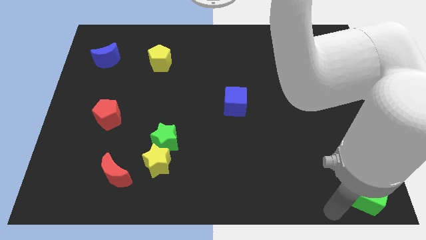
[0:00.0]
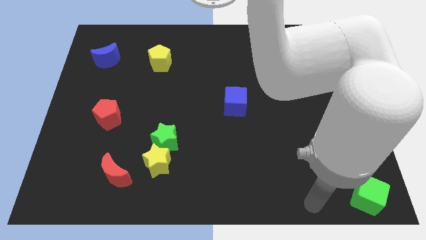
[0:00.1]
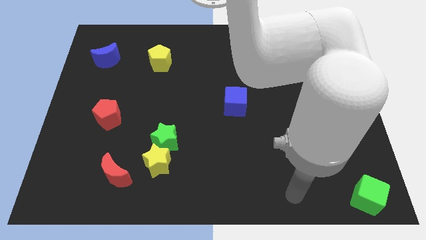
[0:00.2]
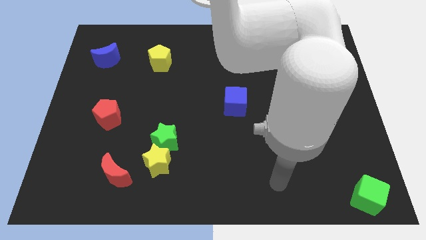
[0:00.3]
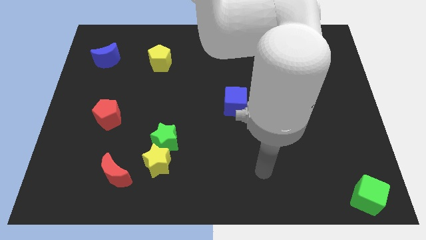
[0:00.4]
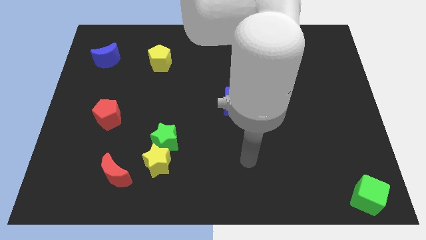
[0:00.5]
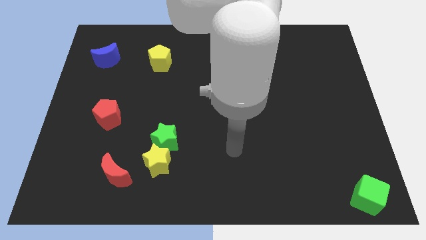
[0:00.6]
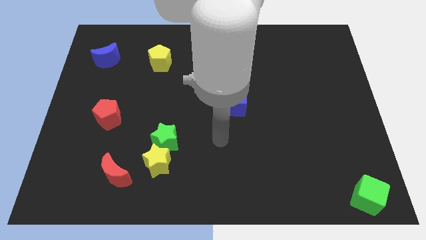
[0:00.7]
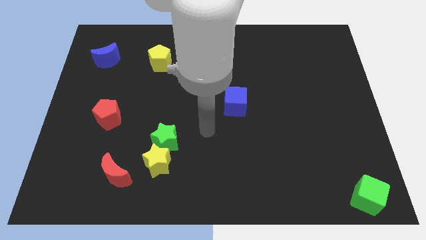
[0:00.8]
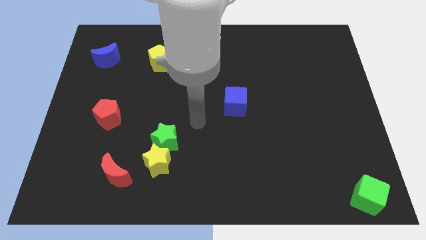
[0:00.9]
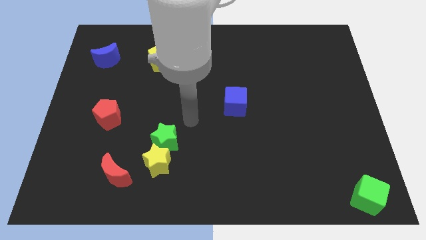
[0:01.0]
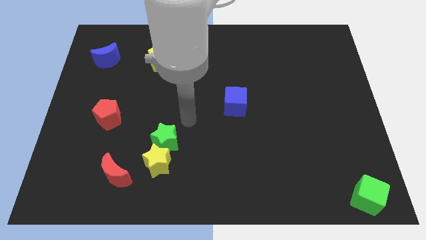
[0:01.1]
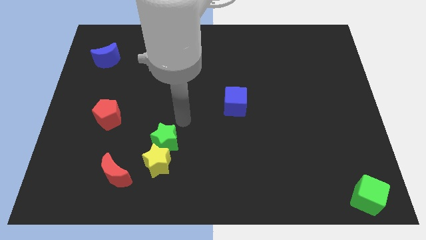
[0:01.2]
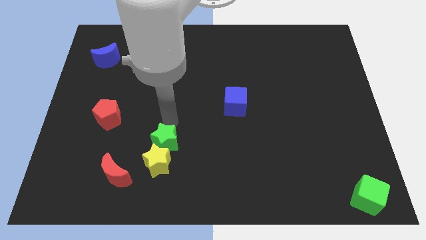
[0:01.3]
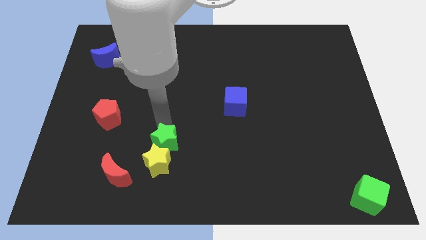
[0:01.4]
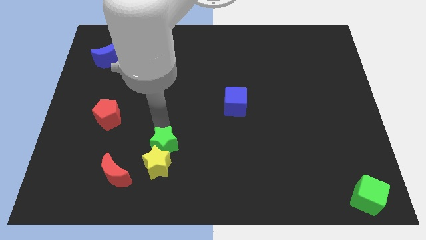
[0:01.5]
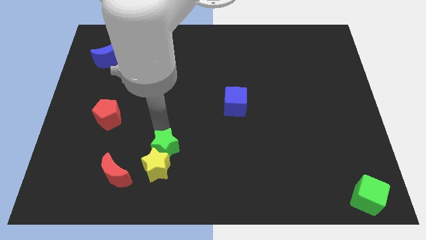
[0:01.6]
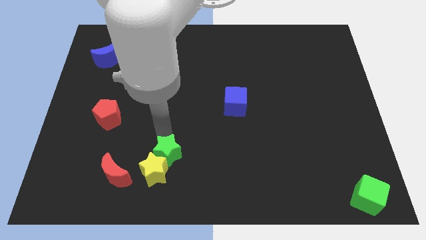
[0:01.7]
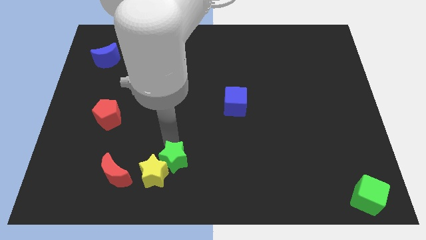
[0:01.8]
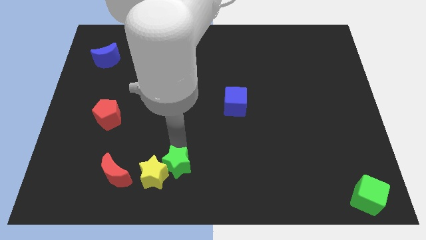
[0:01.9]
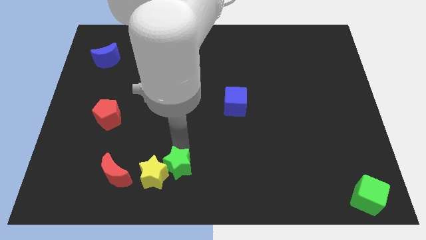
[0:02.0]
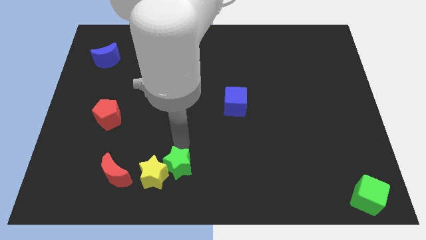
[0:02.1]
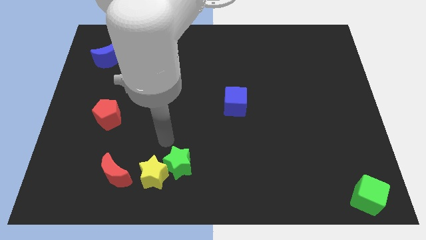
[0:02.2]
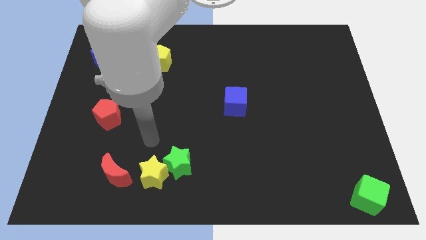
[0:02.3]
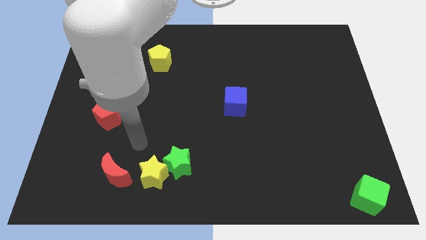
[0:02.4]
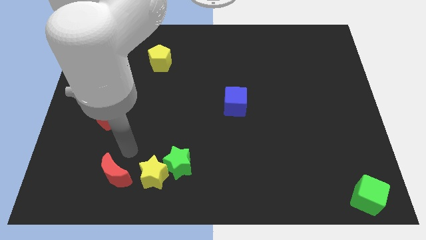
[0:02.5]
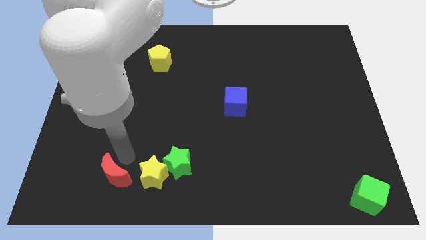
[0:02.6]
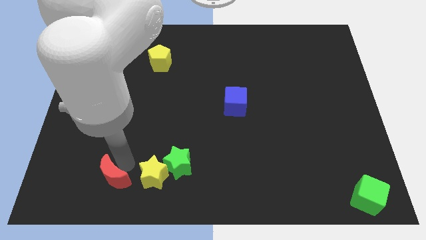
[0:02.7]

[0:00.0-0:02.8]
push the green star to the bottom of the board

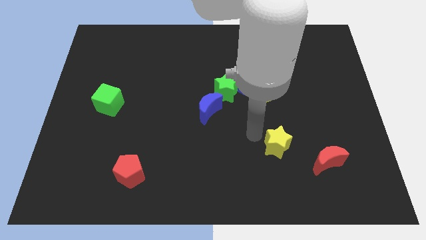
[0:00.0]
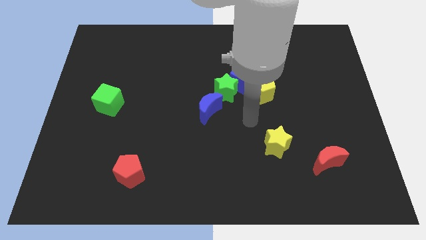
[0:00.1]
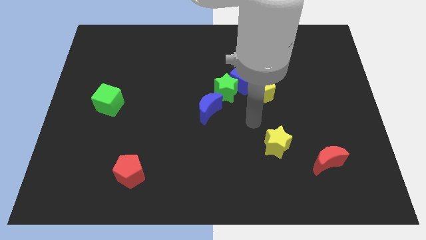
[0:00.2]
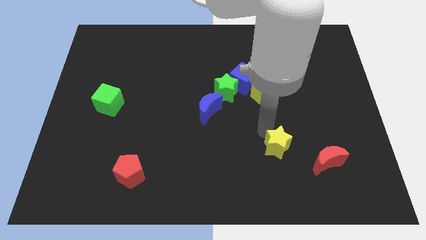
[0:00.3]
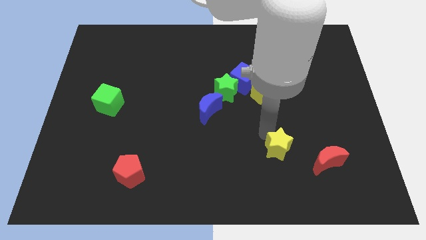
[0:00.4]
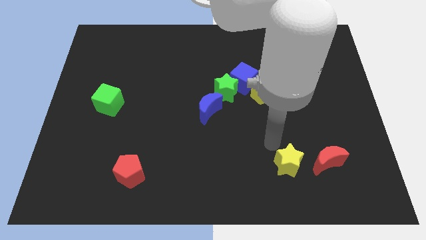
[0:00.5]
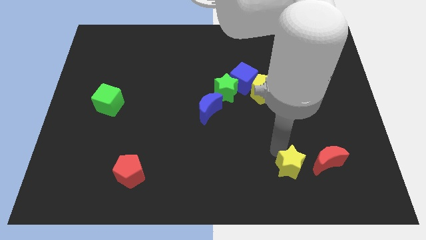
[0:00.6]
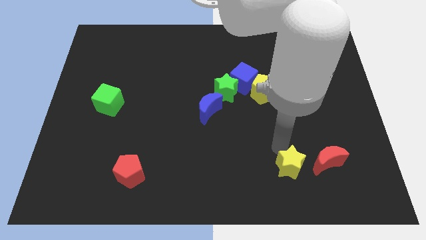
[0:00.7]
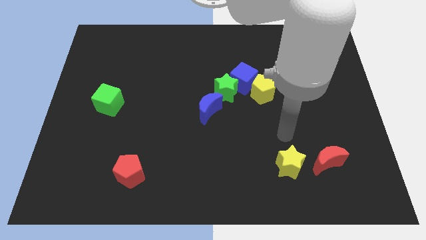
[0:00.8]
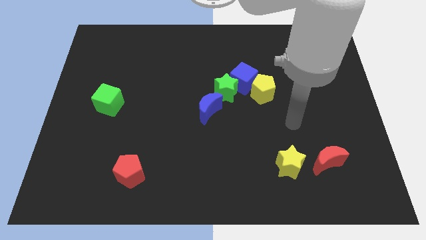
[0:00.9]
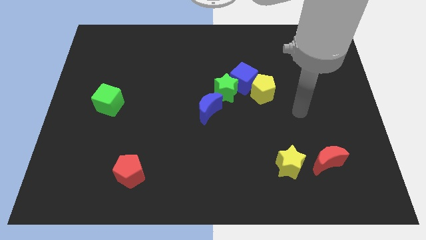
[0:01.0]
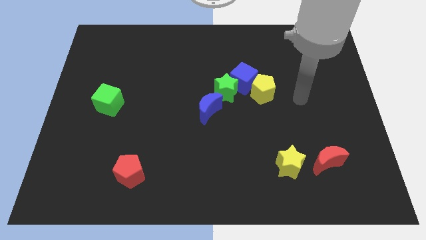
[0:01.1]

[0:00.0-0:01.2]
move the yellow star to the bottomleft side of the red moon

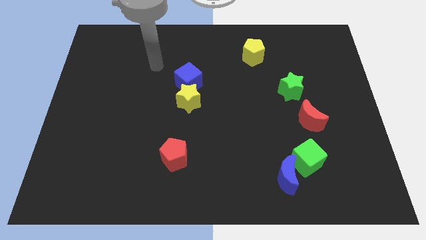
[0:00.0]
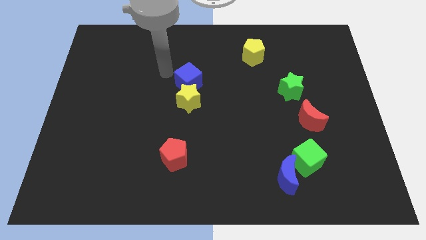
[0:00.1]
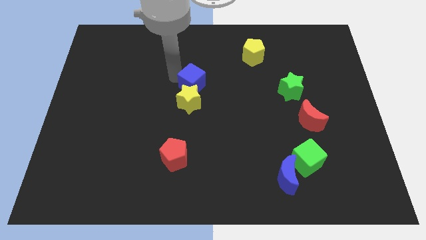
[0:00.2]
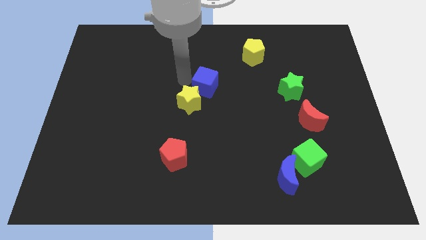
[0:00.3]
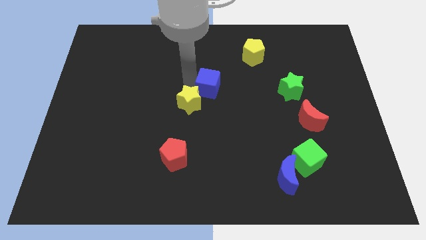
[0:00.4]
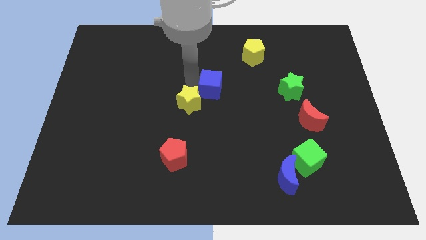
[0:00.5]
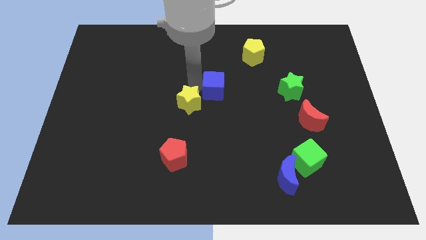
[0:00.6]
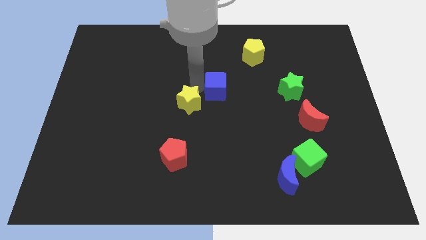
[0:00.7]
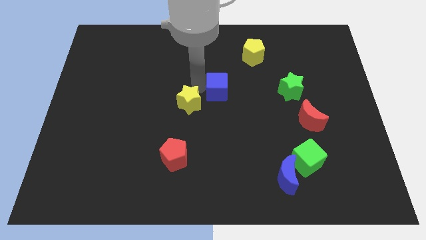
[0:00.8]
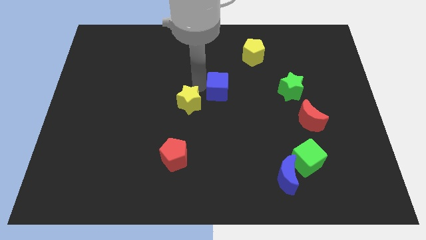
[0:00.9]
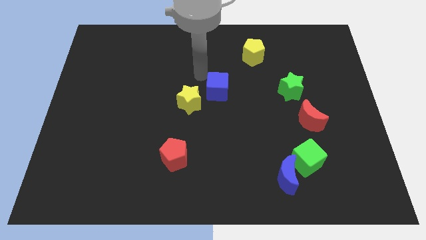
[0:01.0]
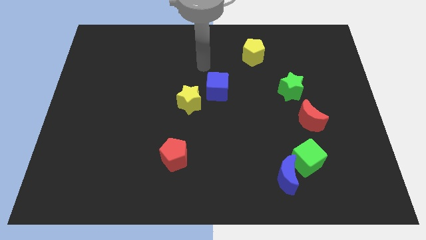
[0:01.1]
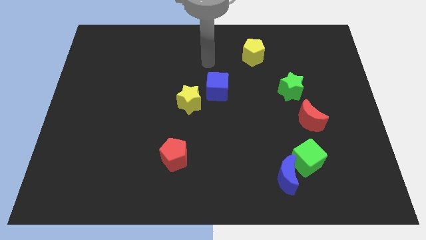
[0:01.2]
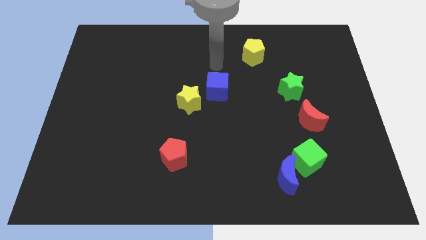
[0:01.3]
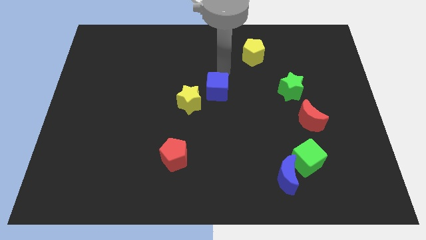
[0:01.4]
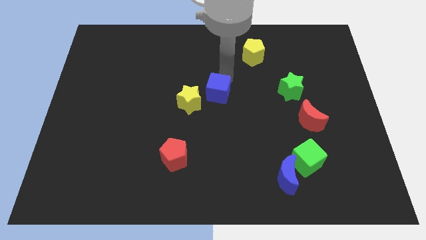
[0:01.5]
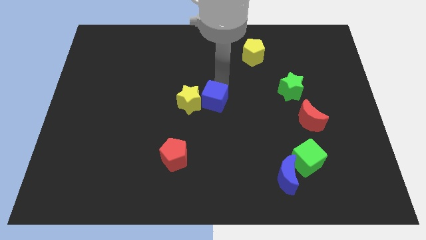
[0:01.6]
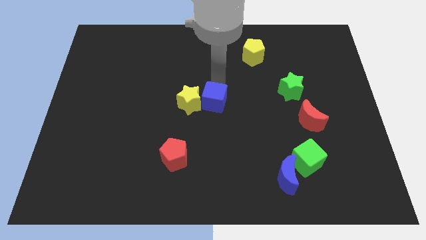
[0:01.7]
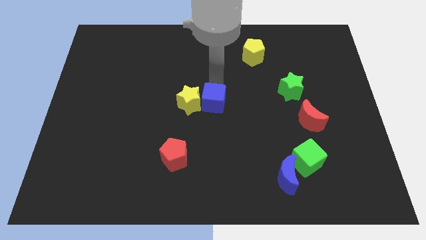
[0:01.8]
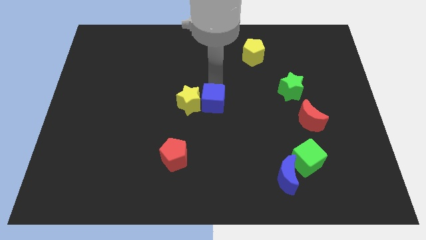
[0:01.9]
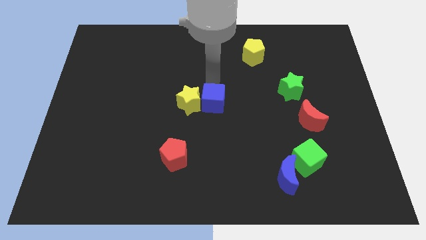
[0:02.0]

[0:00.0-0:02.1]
place the blue cube on the right side of the yellow star

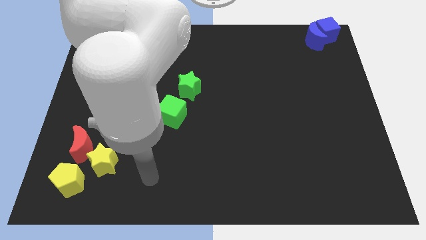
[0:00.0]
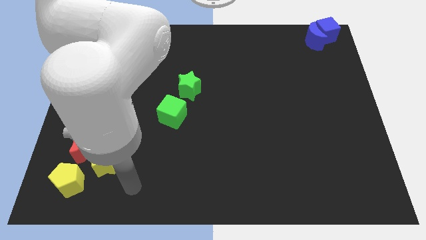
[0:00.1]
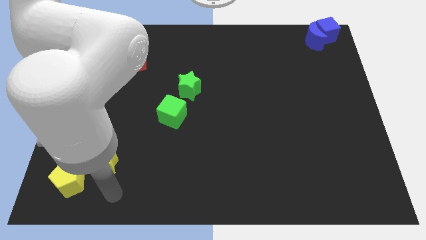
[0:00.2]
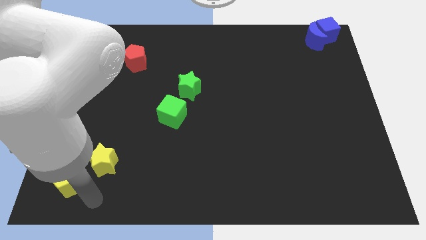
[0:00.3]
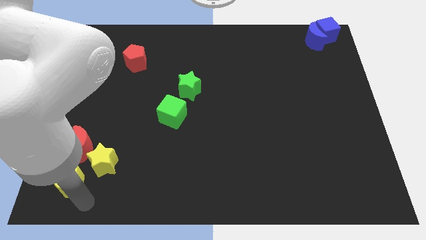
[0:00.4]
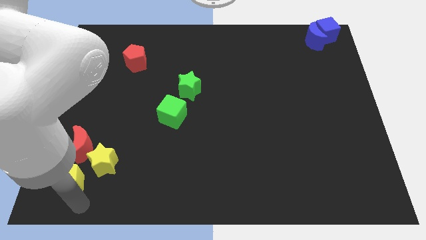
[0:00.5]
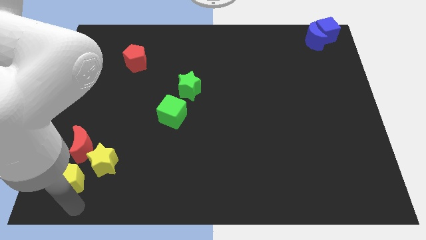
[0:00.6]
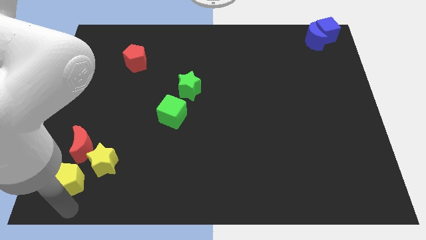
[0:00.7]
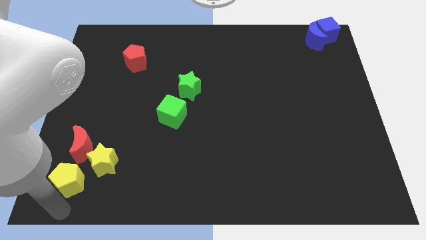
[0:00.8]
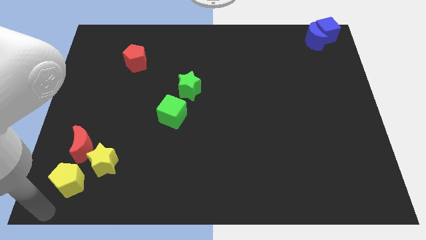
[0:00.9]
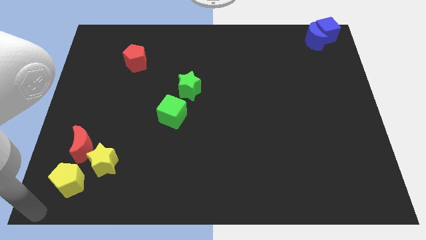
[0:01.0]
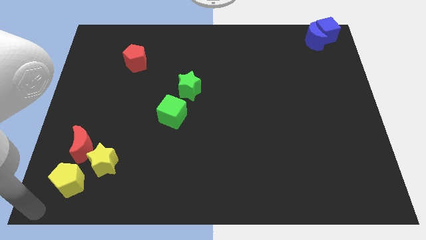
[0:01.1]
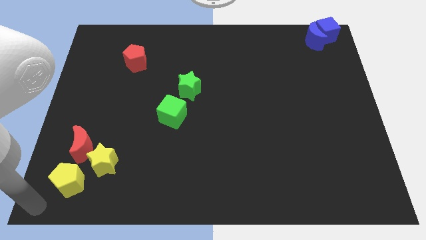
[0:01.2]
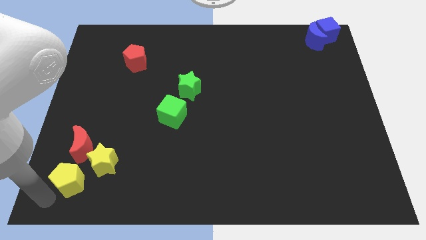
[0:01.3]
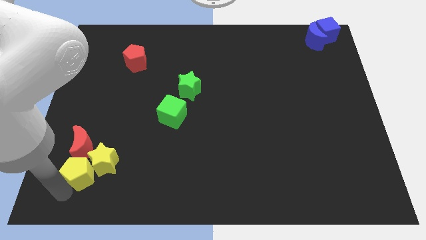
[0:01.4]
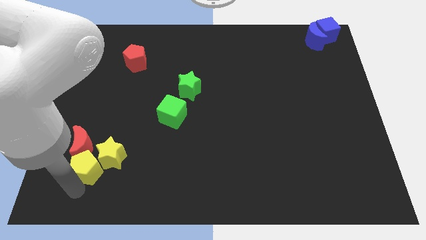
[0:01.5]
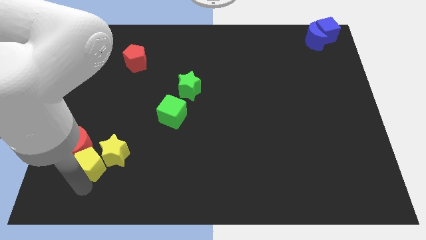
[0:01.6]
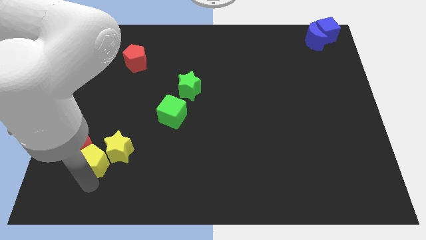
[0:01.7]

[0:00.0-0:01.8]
slide the yellow pentagon at the bottom left side of the yellow star

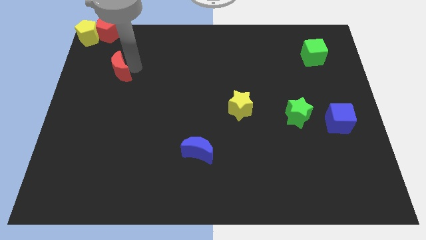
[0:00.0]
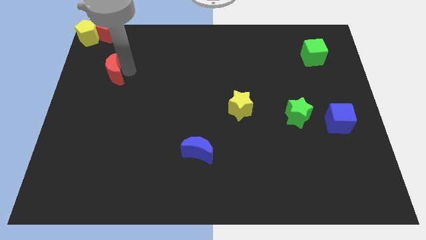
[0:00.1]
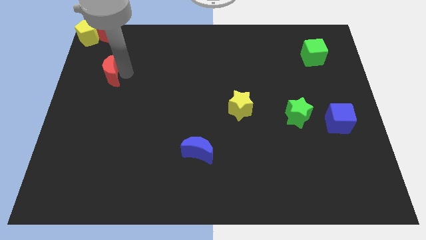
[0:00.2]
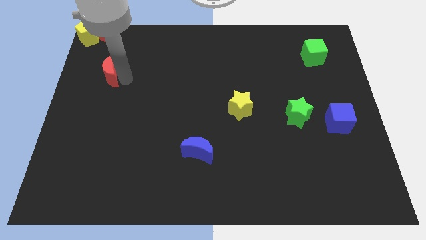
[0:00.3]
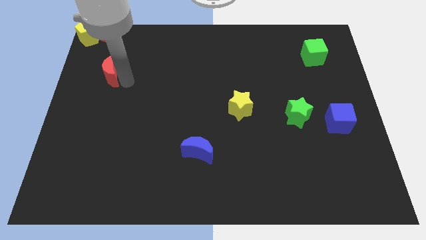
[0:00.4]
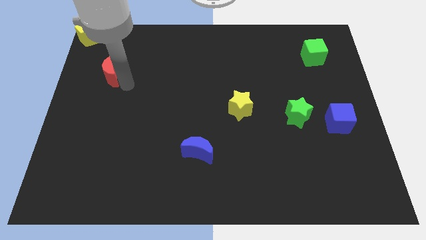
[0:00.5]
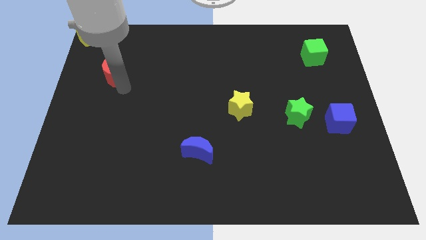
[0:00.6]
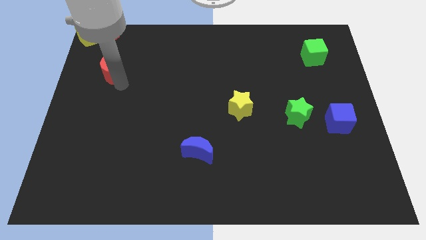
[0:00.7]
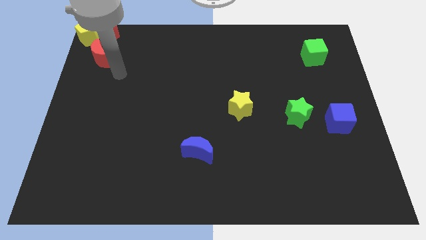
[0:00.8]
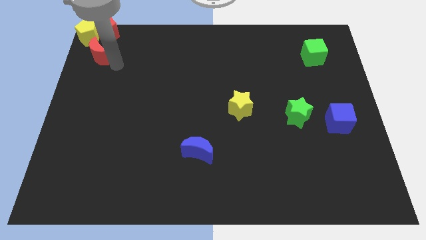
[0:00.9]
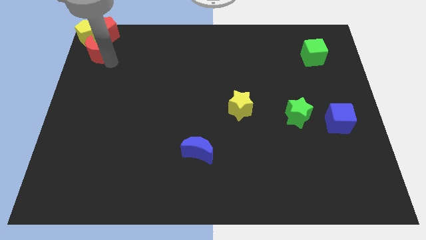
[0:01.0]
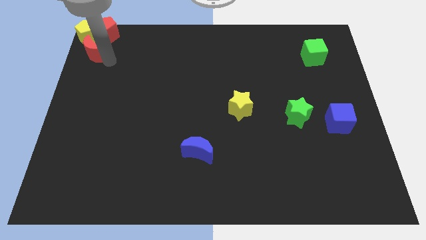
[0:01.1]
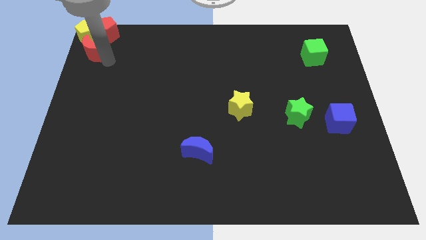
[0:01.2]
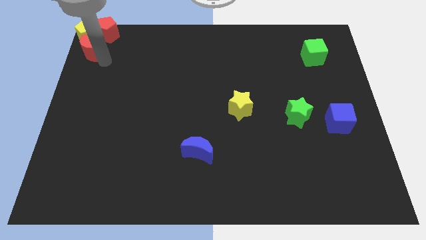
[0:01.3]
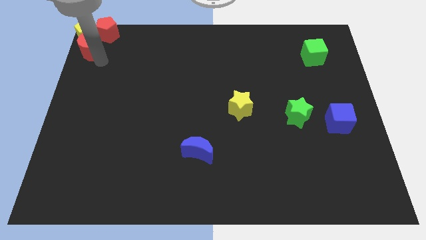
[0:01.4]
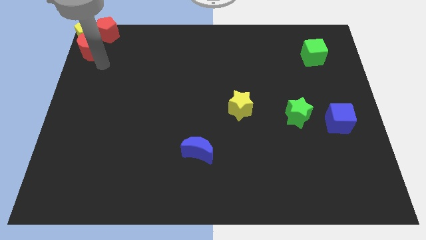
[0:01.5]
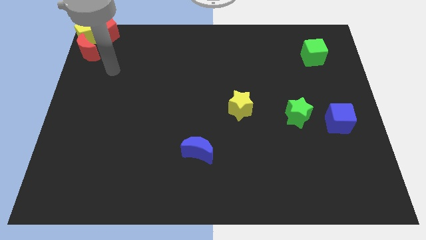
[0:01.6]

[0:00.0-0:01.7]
move the red moon into the group of objects
